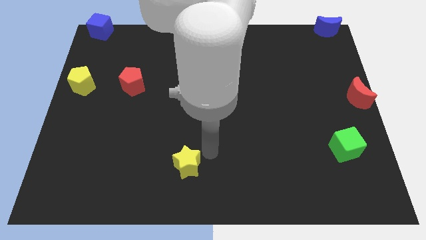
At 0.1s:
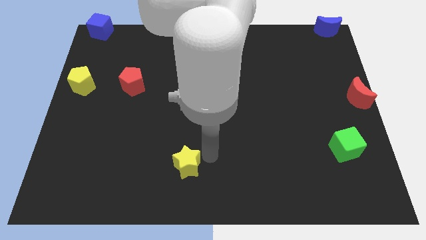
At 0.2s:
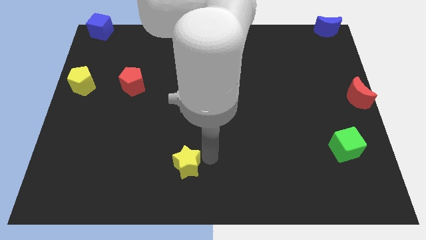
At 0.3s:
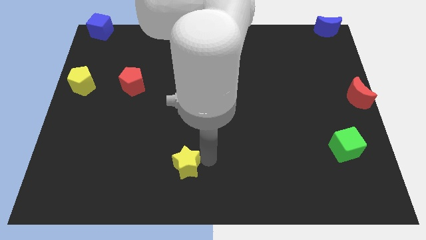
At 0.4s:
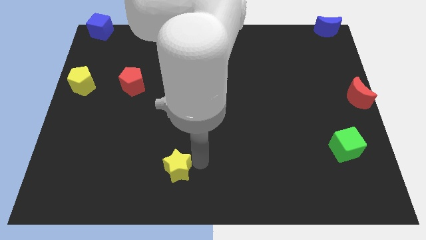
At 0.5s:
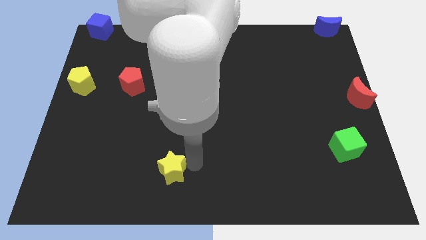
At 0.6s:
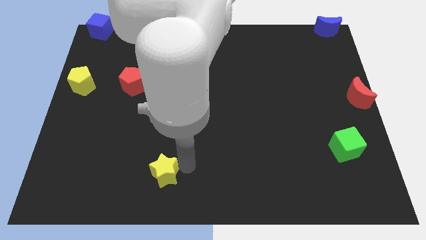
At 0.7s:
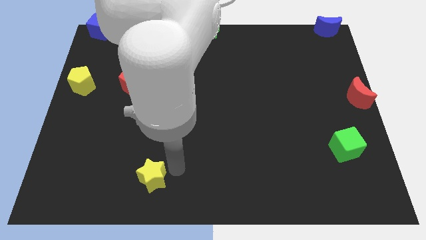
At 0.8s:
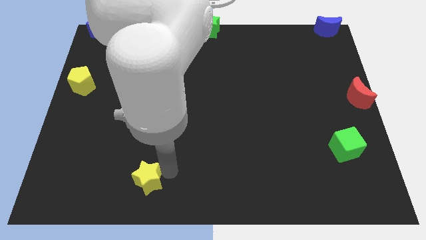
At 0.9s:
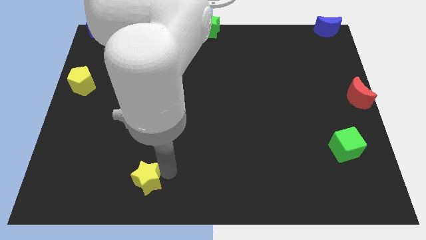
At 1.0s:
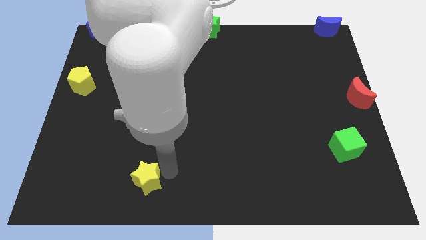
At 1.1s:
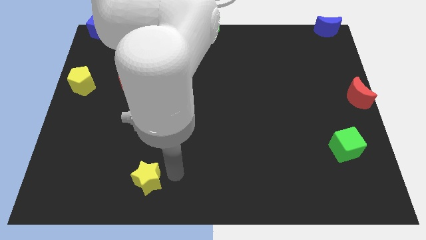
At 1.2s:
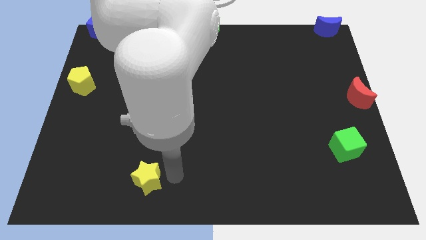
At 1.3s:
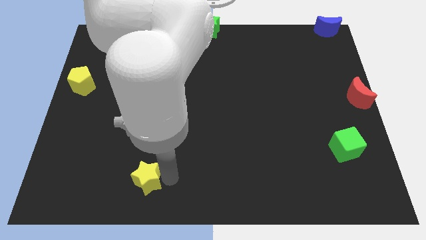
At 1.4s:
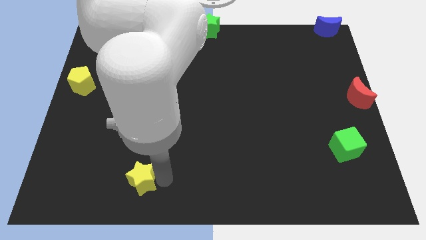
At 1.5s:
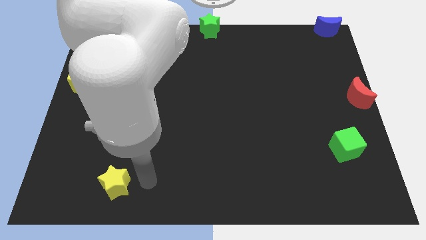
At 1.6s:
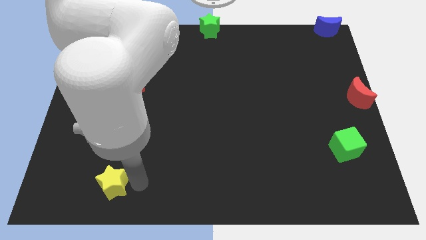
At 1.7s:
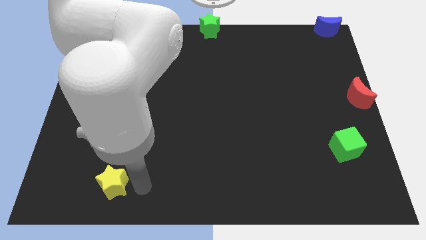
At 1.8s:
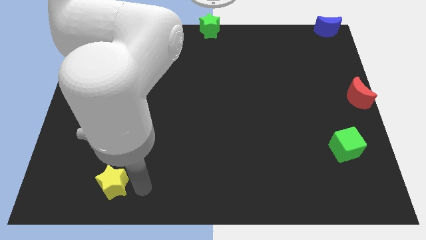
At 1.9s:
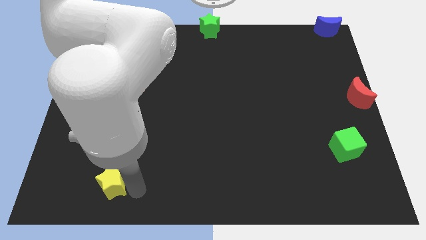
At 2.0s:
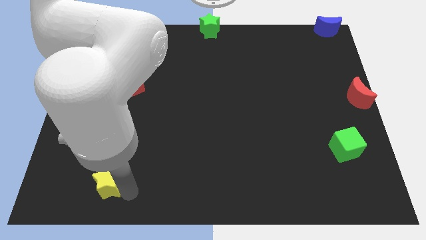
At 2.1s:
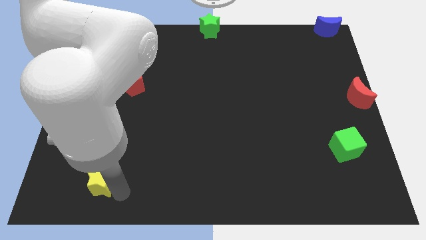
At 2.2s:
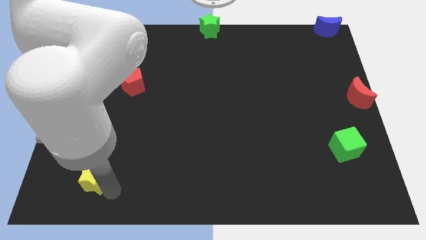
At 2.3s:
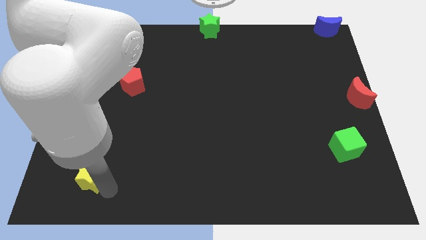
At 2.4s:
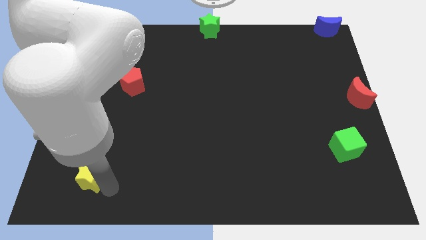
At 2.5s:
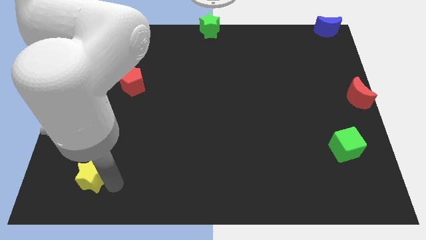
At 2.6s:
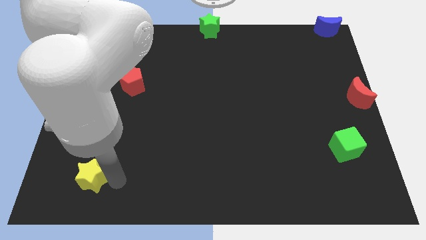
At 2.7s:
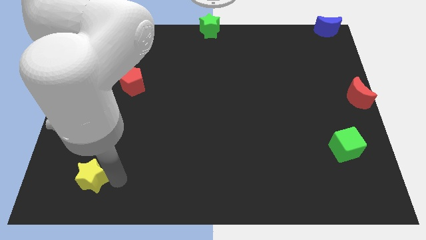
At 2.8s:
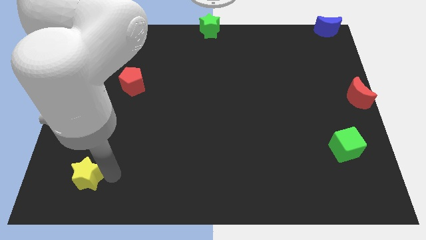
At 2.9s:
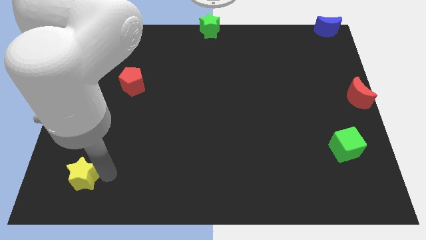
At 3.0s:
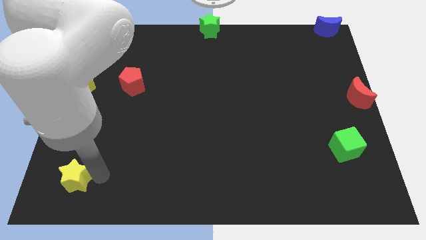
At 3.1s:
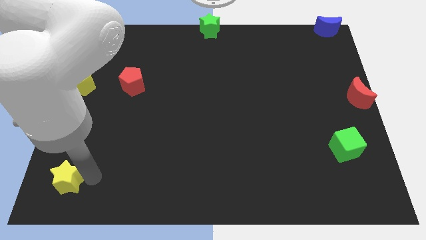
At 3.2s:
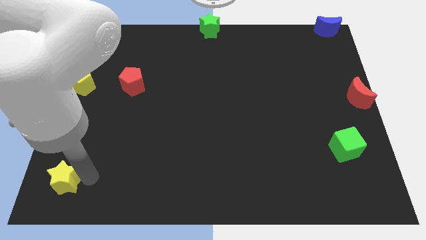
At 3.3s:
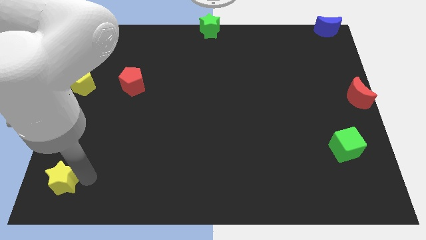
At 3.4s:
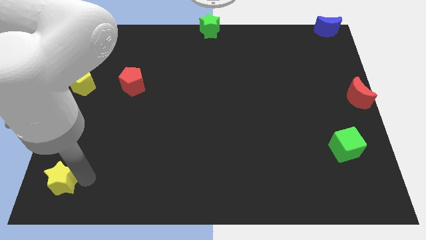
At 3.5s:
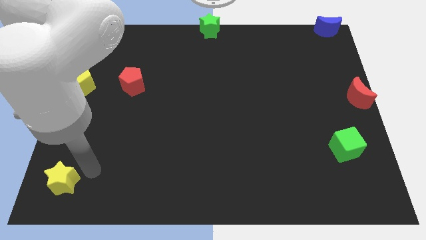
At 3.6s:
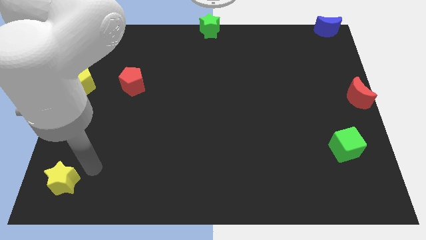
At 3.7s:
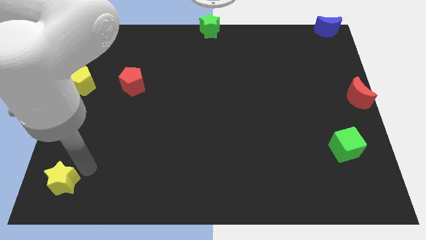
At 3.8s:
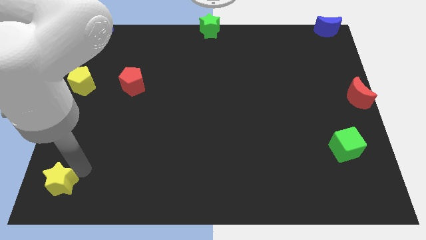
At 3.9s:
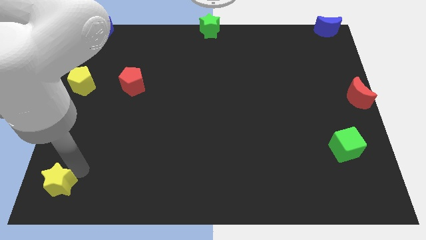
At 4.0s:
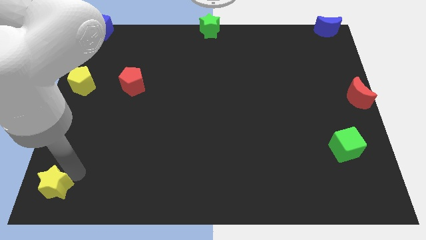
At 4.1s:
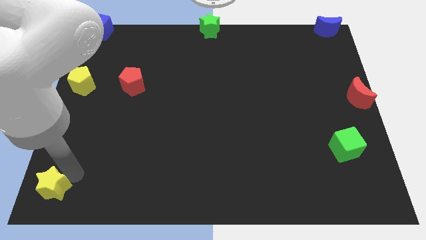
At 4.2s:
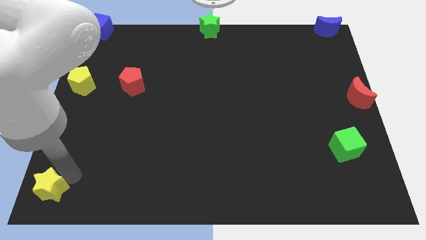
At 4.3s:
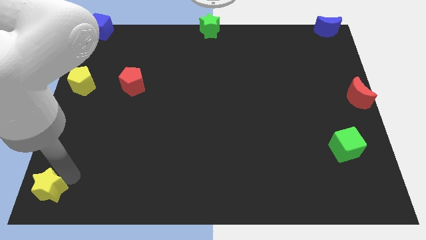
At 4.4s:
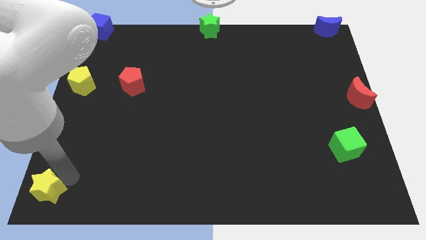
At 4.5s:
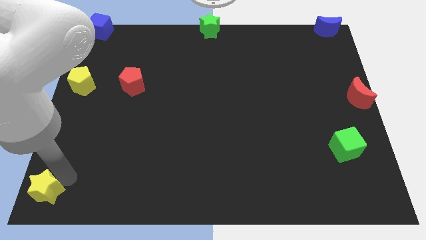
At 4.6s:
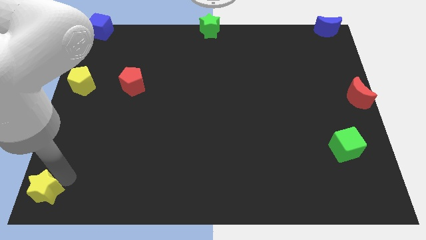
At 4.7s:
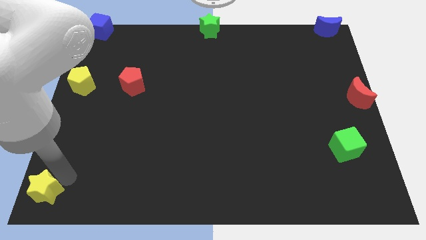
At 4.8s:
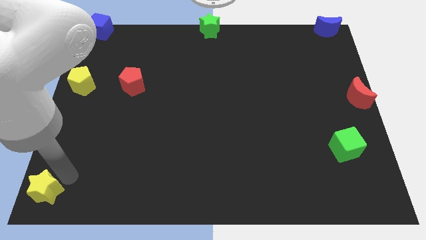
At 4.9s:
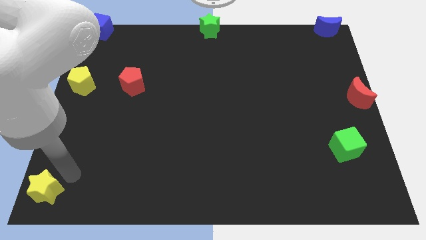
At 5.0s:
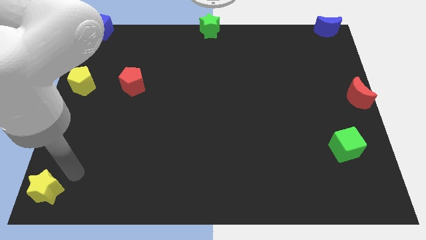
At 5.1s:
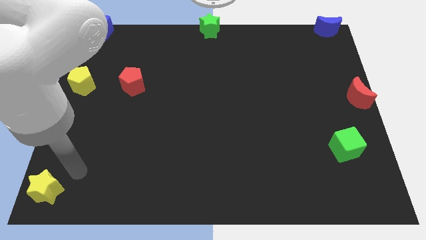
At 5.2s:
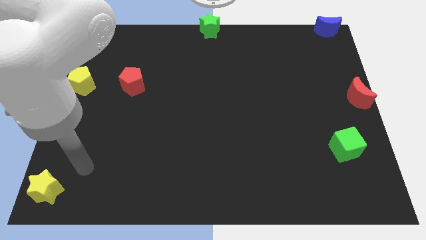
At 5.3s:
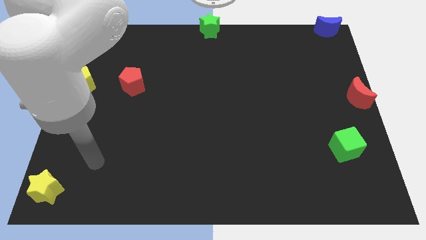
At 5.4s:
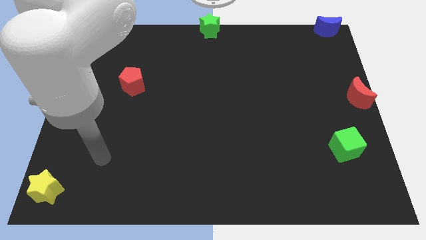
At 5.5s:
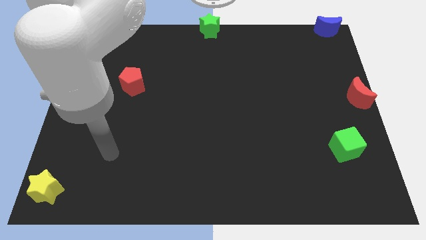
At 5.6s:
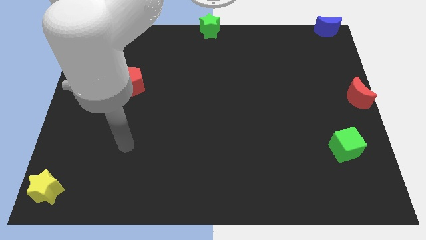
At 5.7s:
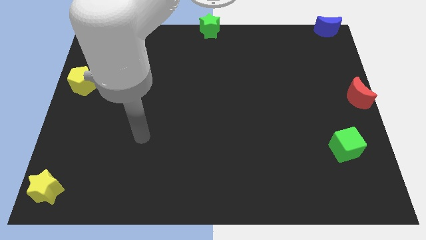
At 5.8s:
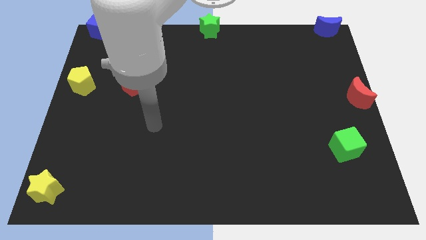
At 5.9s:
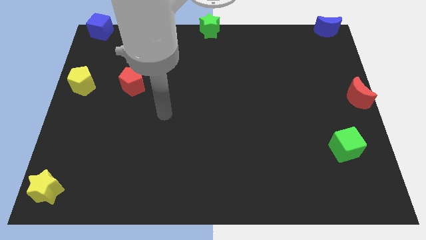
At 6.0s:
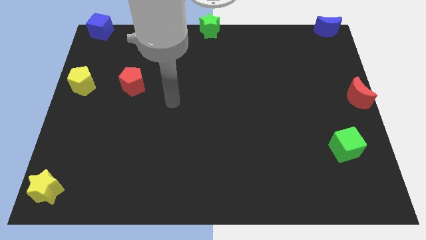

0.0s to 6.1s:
push the yellow star to the bottom left corner of the board

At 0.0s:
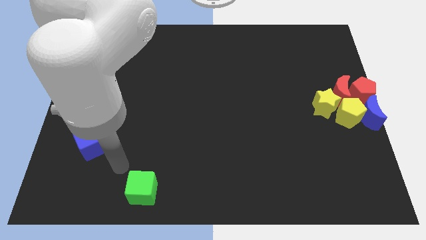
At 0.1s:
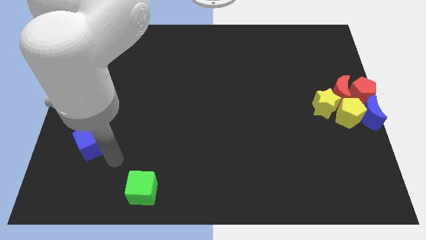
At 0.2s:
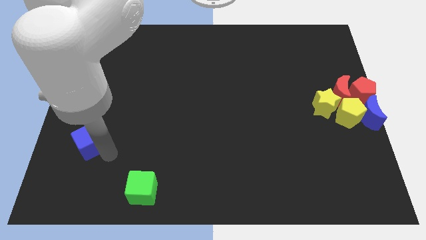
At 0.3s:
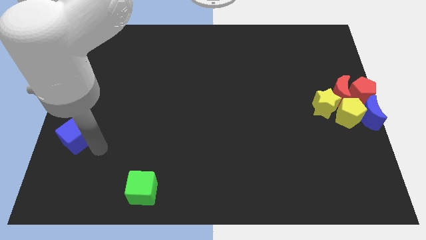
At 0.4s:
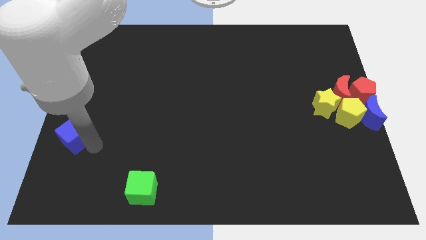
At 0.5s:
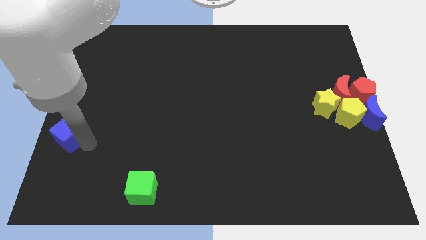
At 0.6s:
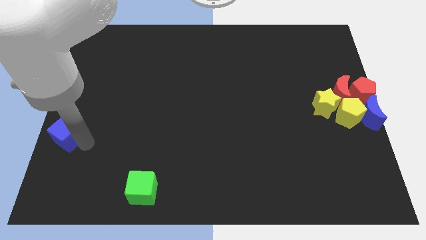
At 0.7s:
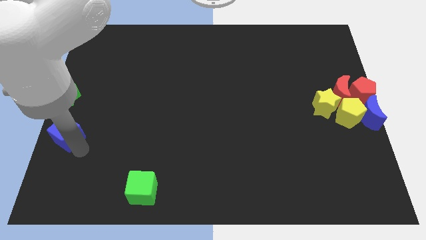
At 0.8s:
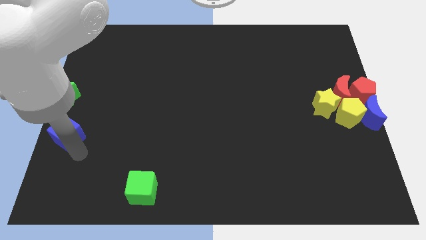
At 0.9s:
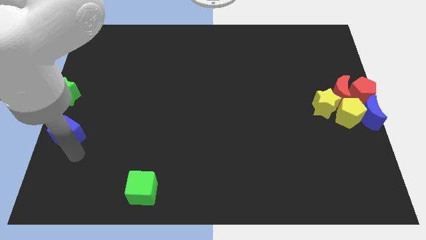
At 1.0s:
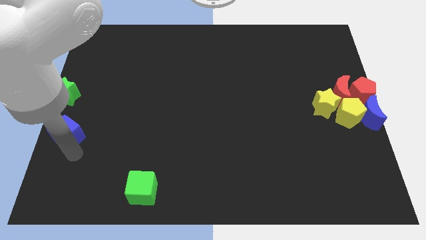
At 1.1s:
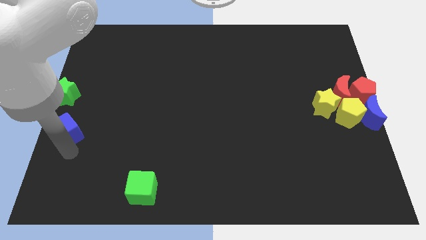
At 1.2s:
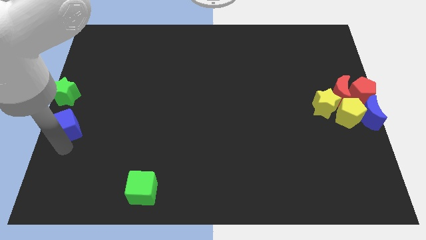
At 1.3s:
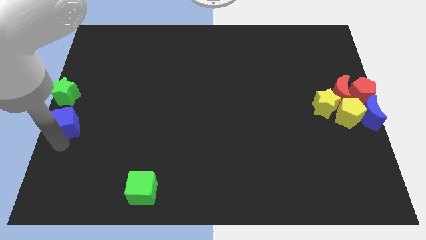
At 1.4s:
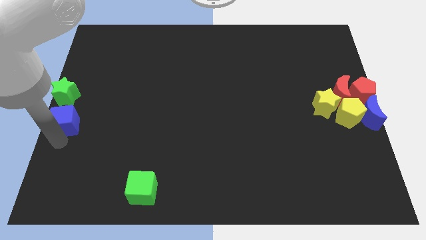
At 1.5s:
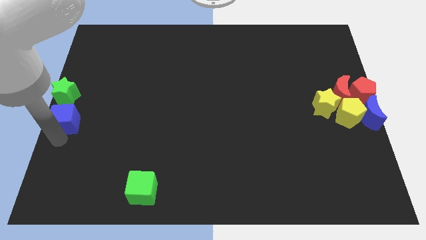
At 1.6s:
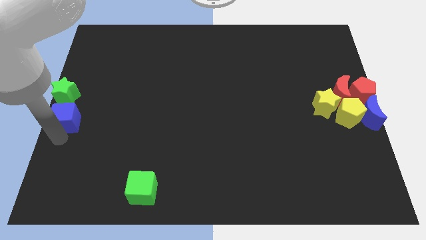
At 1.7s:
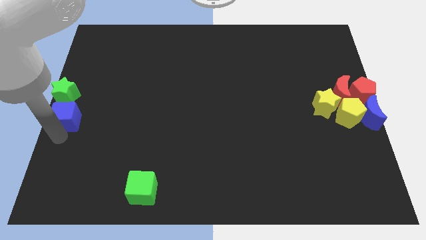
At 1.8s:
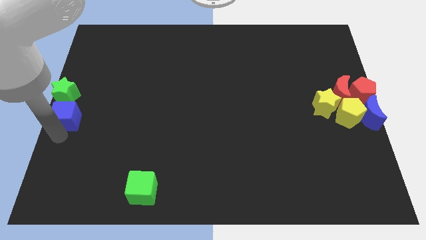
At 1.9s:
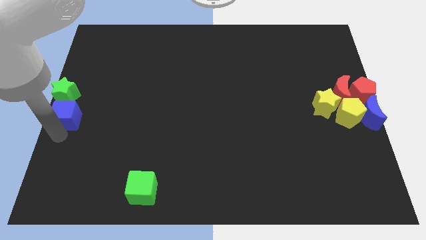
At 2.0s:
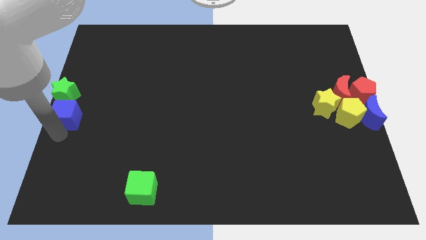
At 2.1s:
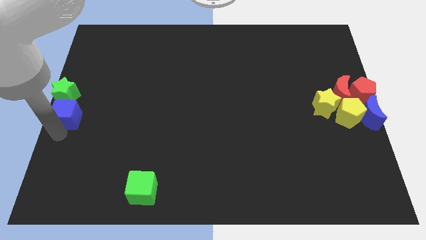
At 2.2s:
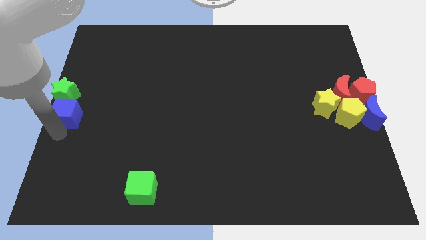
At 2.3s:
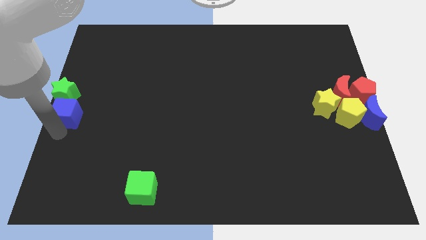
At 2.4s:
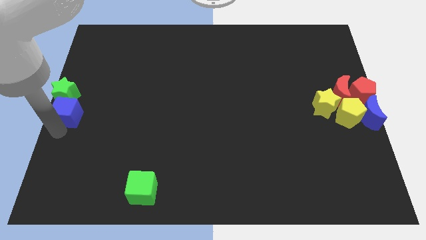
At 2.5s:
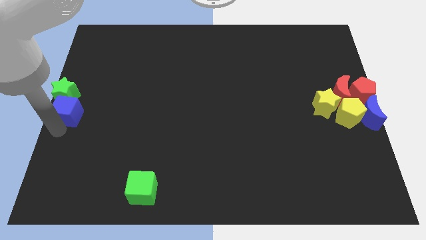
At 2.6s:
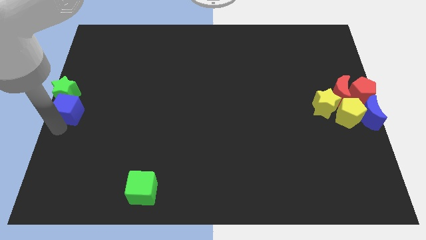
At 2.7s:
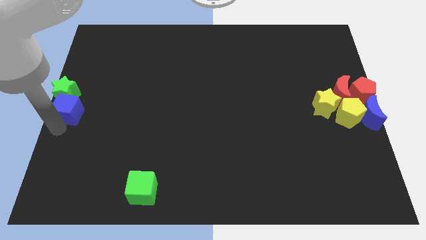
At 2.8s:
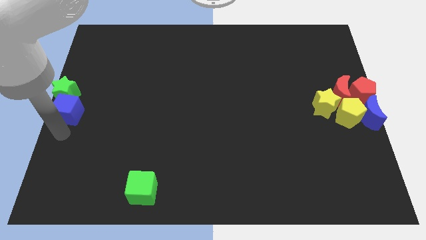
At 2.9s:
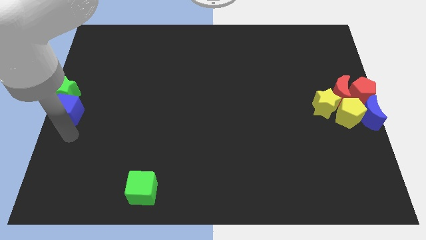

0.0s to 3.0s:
move the blue cube to the bottom of the green star
